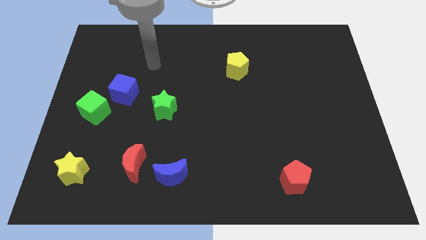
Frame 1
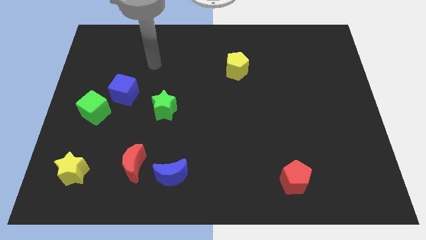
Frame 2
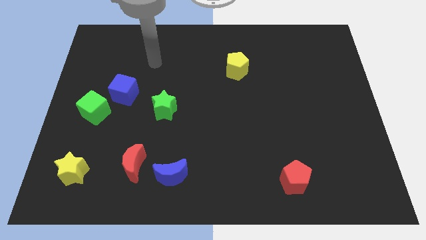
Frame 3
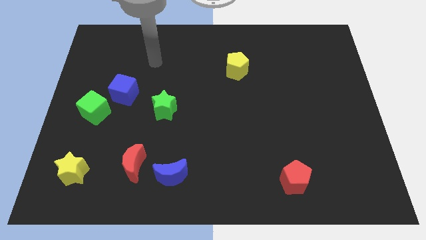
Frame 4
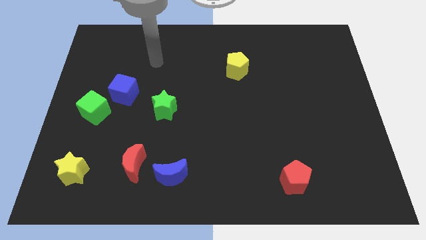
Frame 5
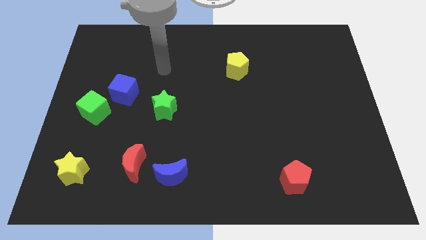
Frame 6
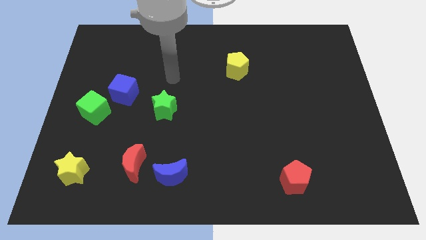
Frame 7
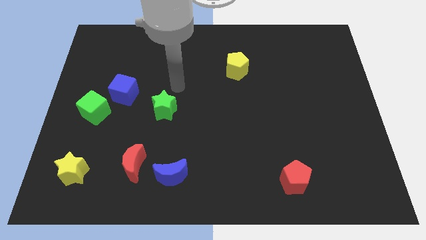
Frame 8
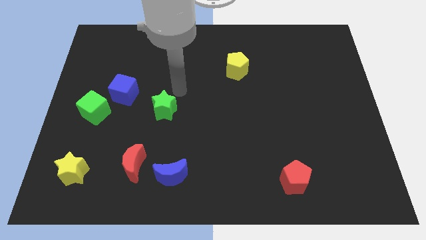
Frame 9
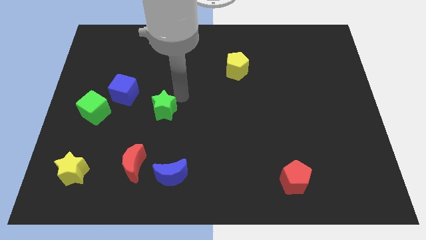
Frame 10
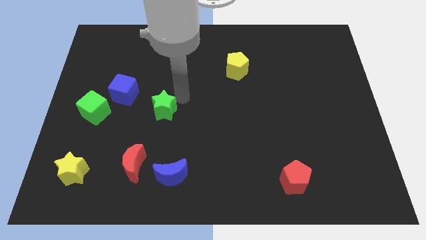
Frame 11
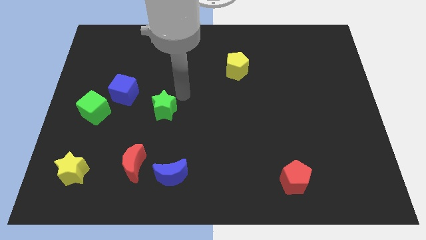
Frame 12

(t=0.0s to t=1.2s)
move your arm close to the top right of the green star

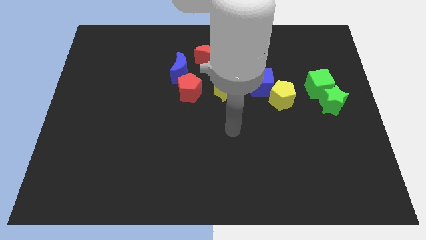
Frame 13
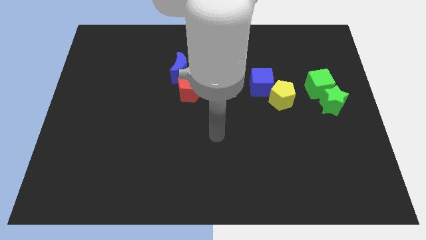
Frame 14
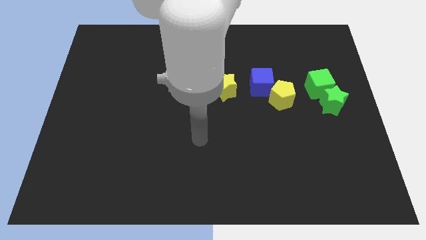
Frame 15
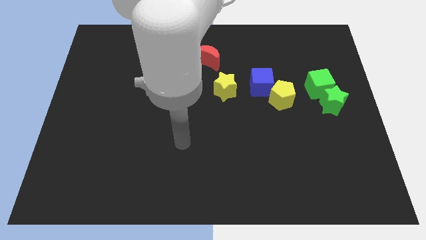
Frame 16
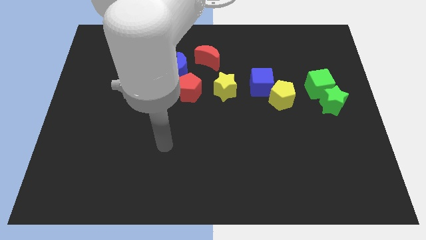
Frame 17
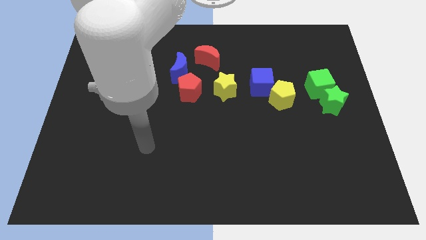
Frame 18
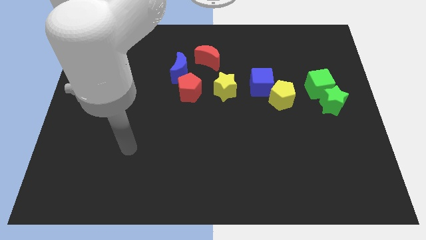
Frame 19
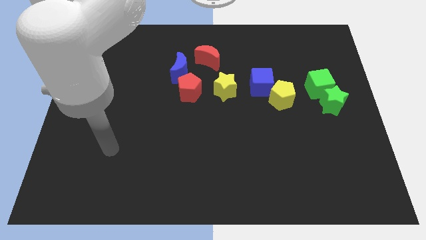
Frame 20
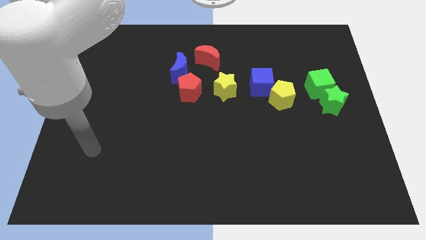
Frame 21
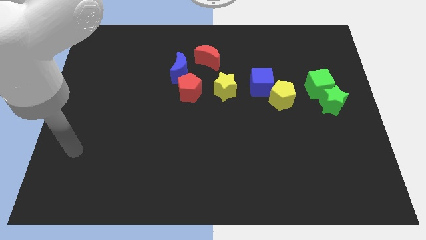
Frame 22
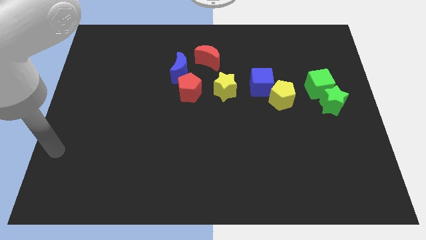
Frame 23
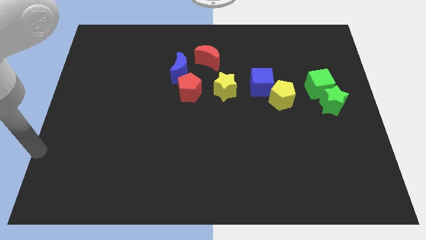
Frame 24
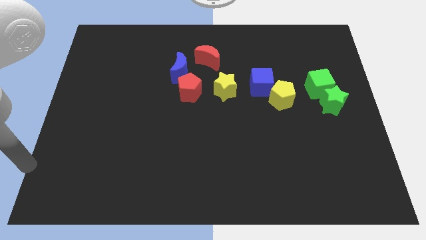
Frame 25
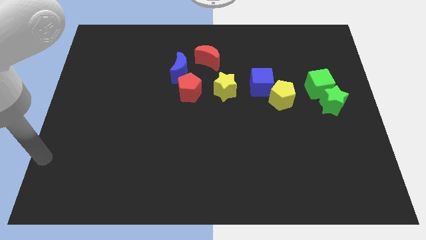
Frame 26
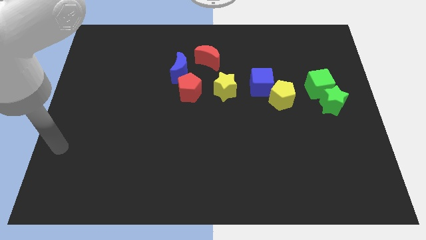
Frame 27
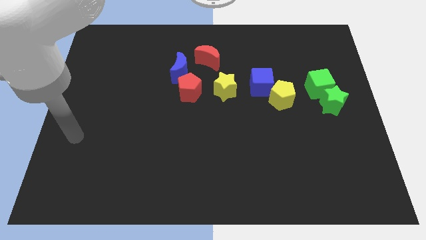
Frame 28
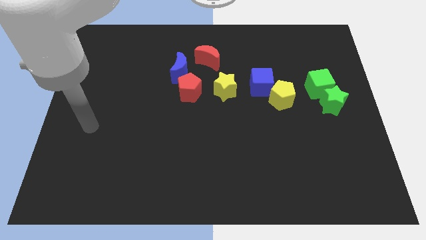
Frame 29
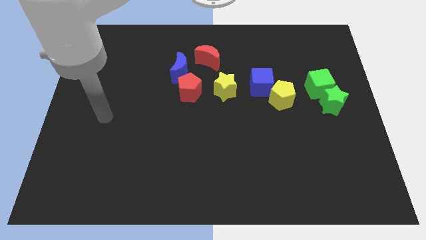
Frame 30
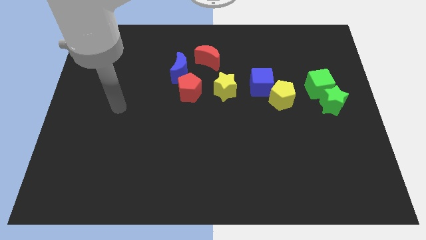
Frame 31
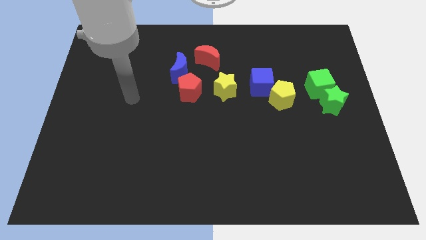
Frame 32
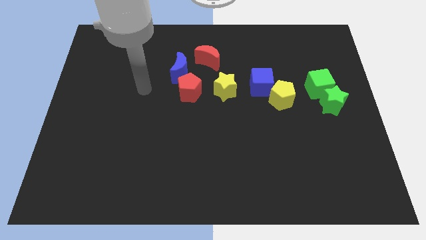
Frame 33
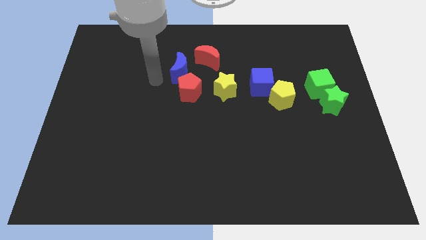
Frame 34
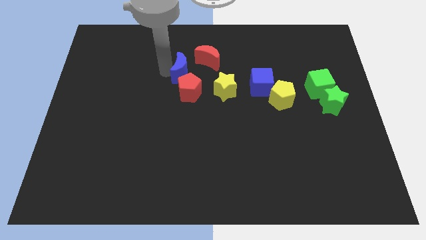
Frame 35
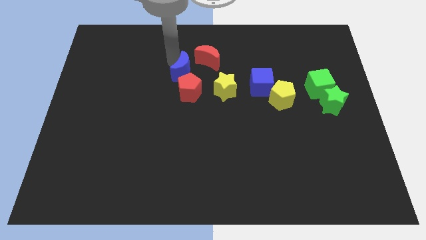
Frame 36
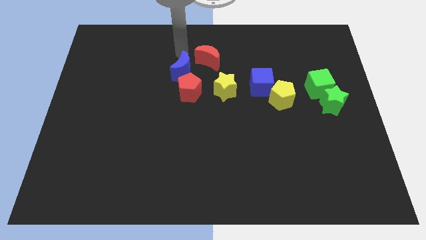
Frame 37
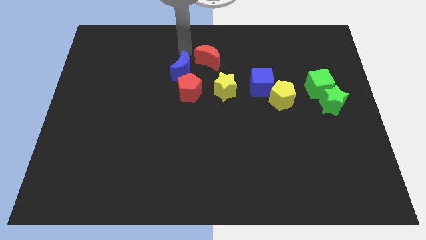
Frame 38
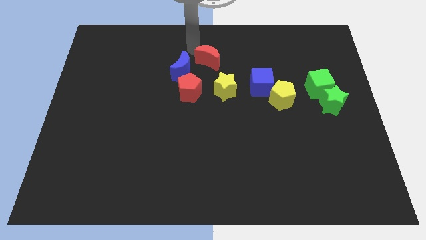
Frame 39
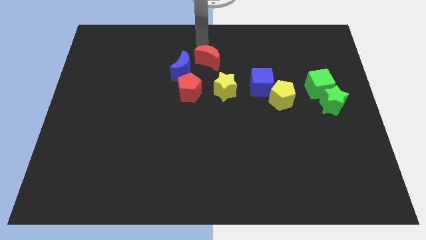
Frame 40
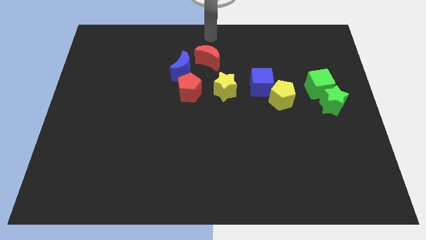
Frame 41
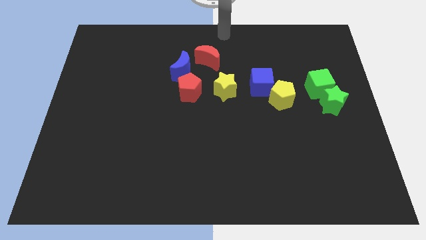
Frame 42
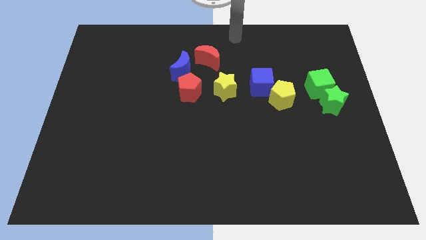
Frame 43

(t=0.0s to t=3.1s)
move the blue moon slightly

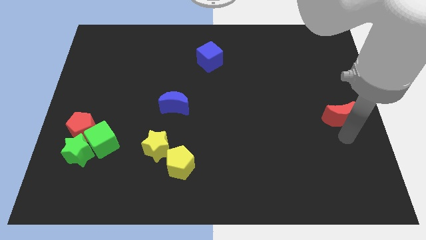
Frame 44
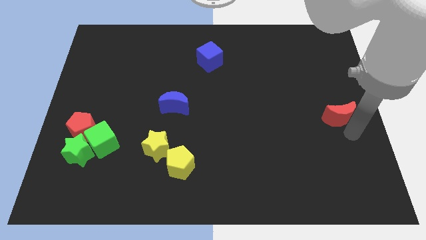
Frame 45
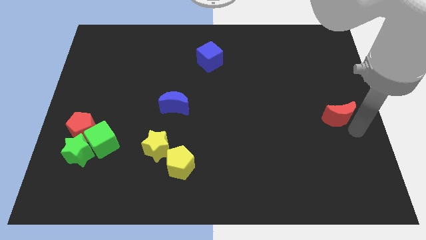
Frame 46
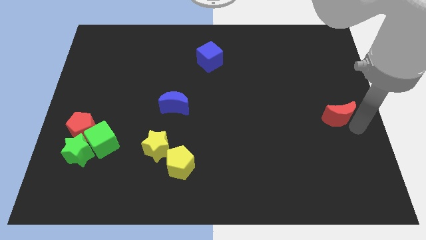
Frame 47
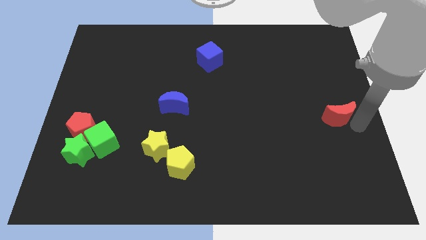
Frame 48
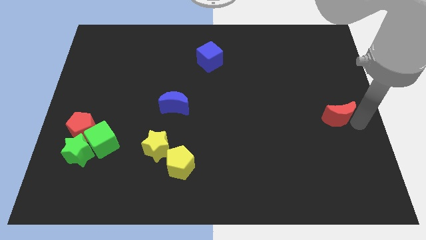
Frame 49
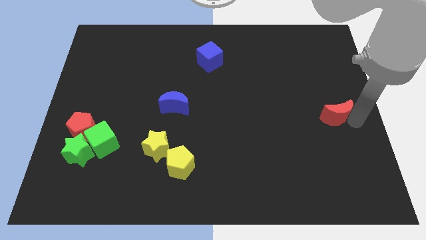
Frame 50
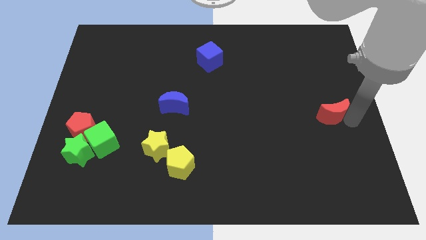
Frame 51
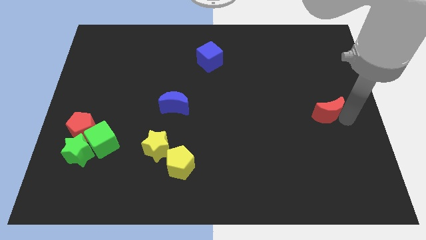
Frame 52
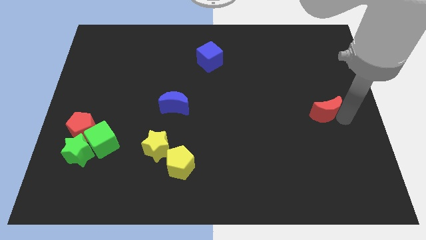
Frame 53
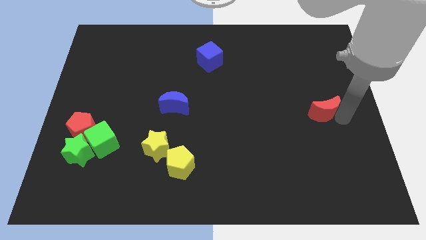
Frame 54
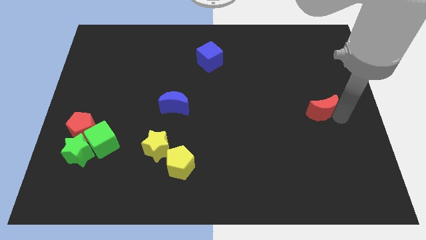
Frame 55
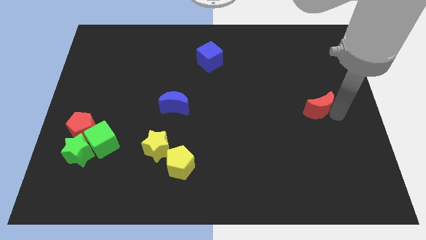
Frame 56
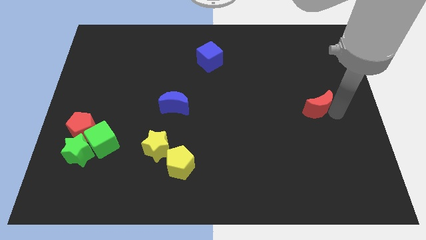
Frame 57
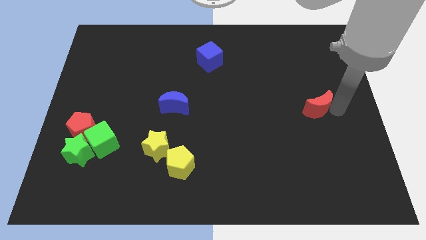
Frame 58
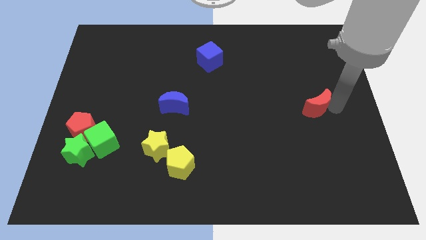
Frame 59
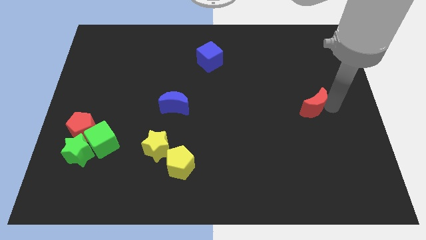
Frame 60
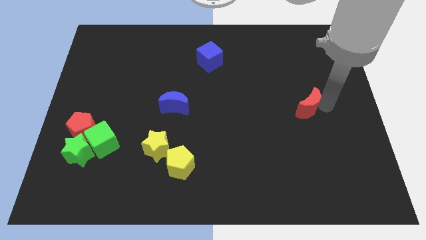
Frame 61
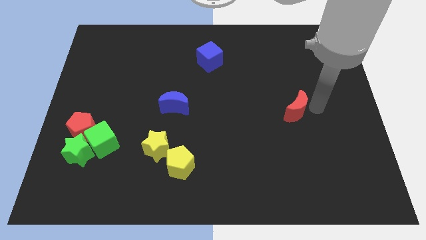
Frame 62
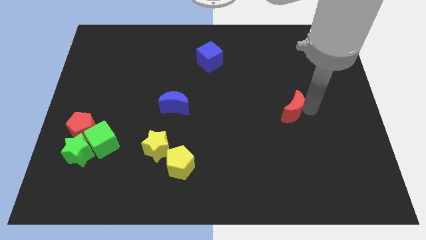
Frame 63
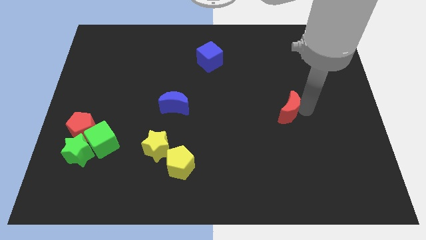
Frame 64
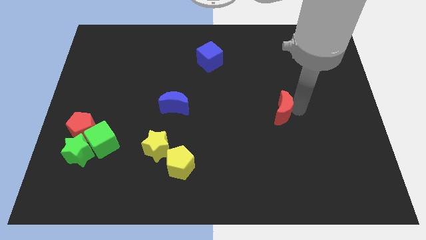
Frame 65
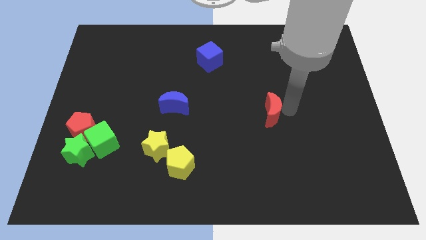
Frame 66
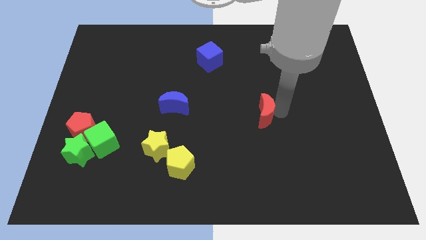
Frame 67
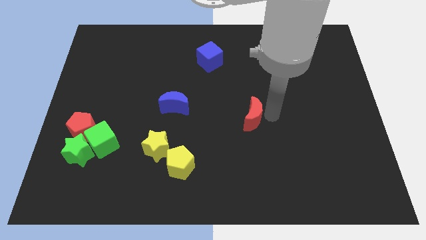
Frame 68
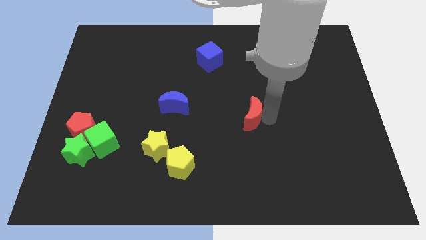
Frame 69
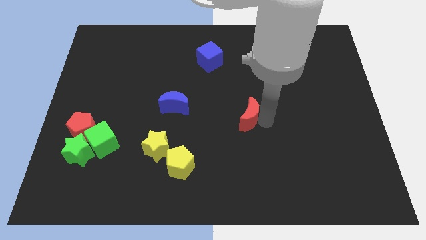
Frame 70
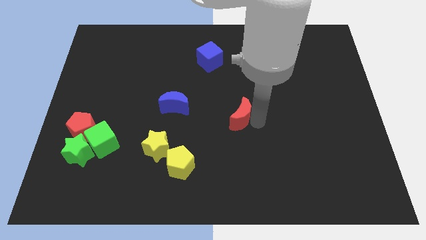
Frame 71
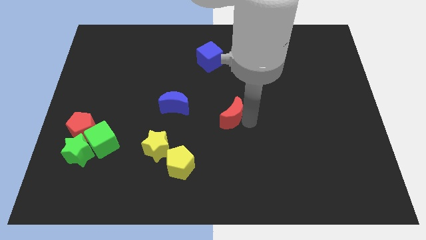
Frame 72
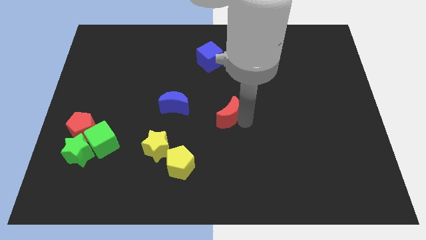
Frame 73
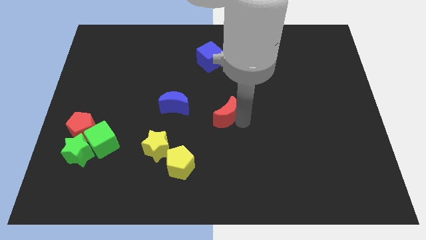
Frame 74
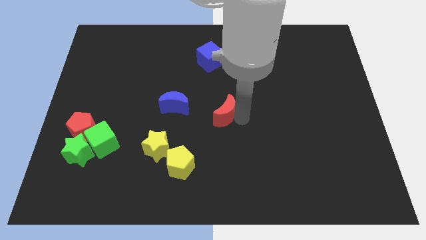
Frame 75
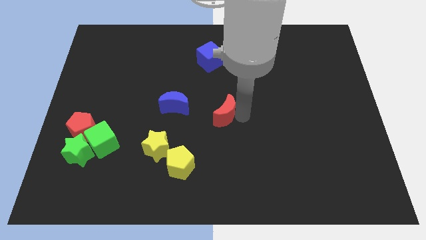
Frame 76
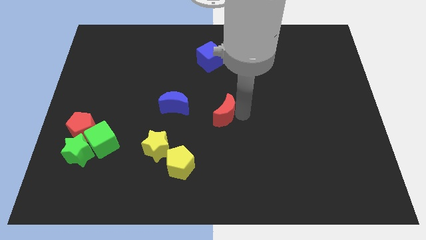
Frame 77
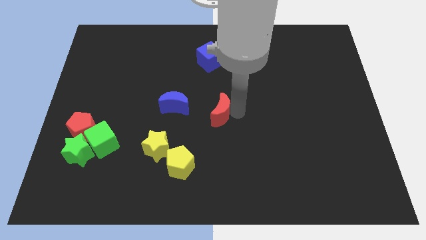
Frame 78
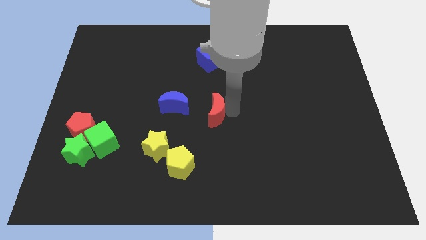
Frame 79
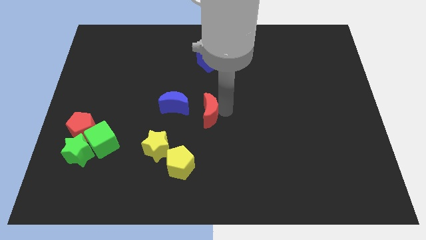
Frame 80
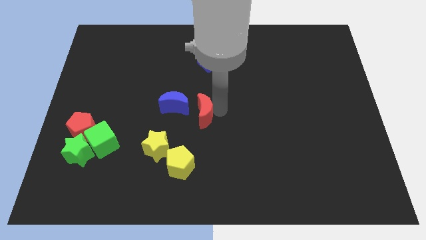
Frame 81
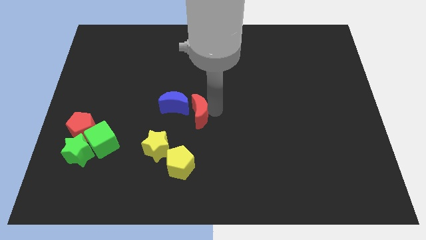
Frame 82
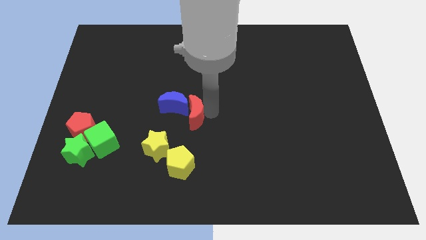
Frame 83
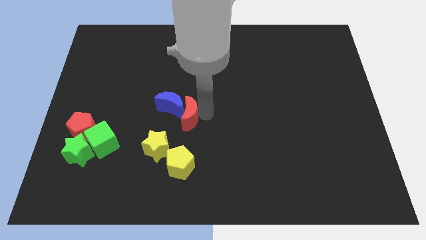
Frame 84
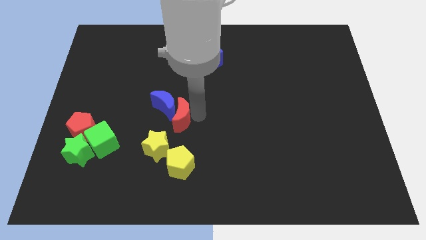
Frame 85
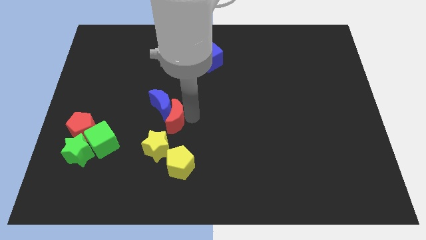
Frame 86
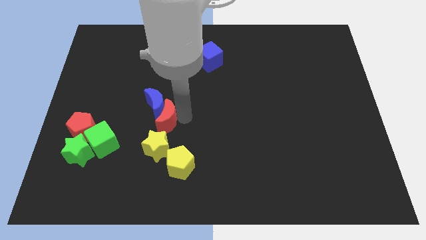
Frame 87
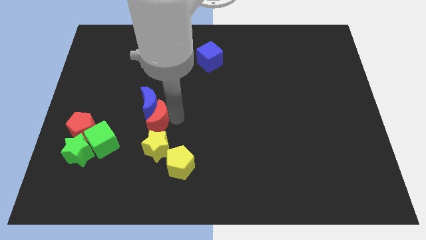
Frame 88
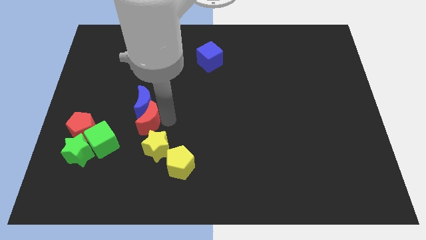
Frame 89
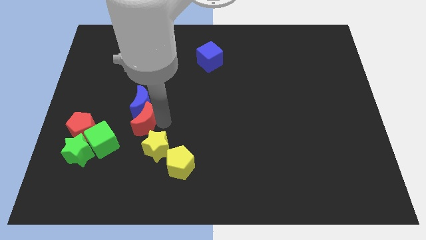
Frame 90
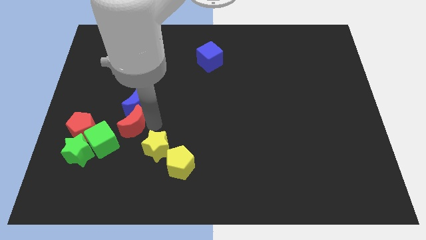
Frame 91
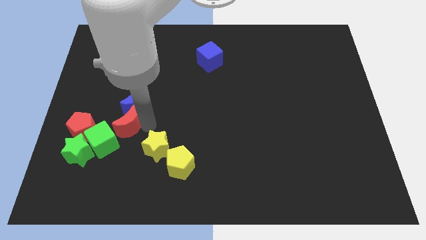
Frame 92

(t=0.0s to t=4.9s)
push the red crescent into the blue crescent
